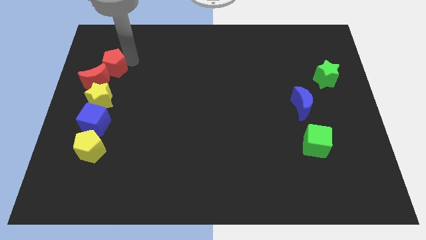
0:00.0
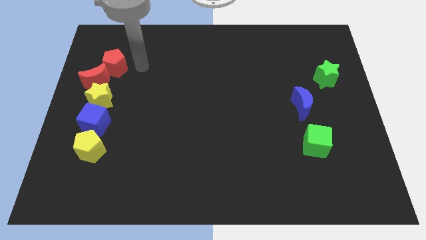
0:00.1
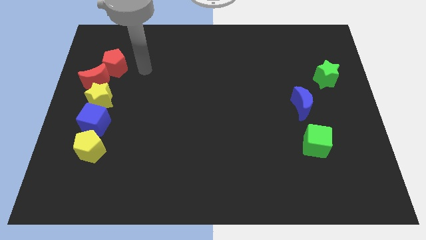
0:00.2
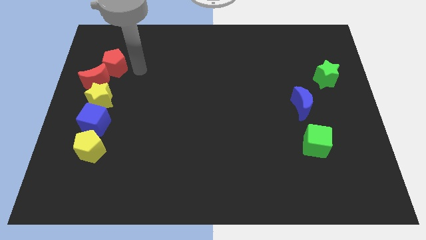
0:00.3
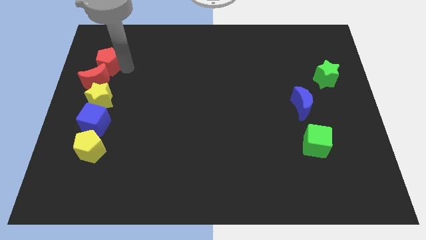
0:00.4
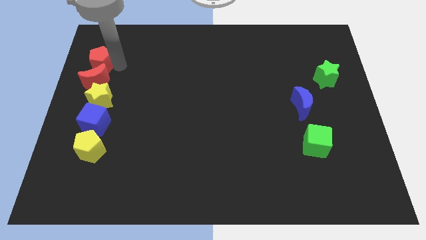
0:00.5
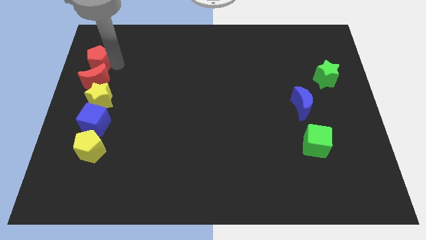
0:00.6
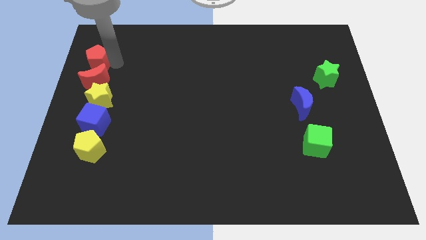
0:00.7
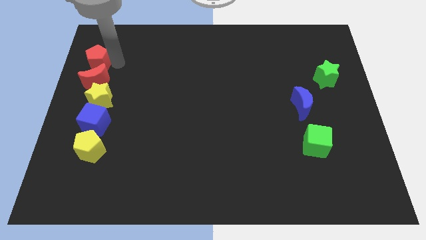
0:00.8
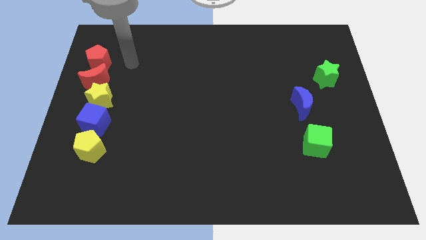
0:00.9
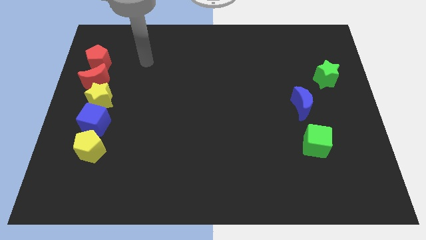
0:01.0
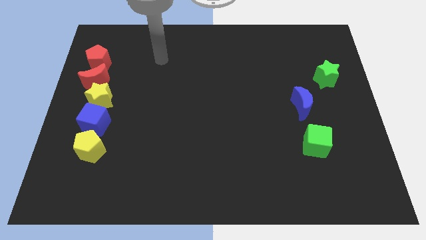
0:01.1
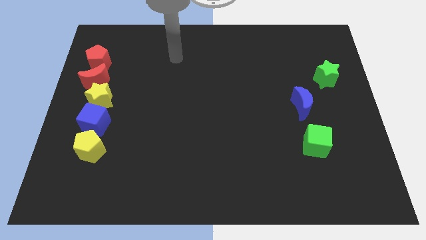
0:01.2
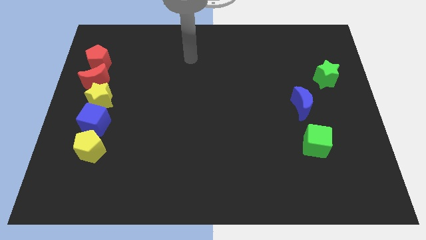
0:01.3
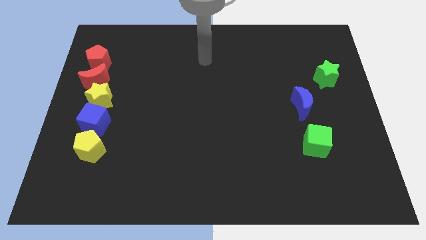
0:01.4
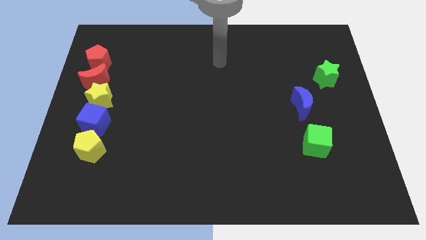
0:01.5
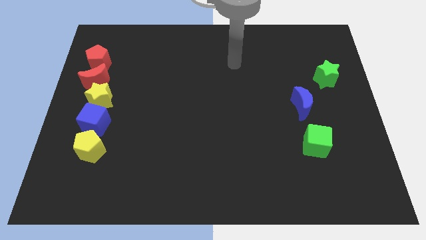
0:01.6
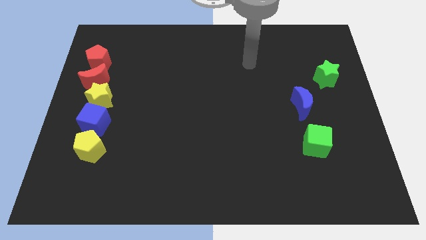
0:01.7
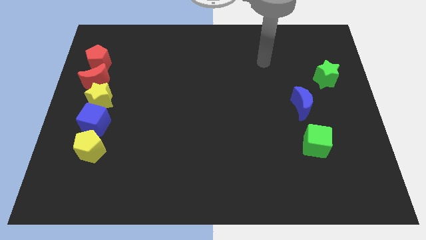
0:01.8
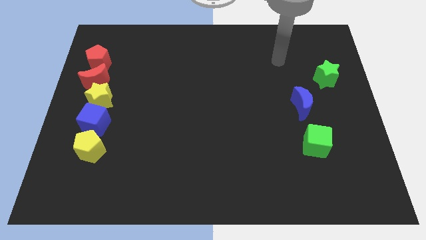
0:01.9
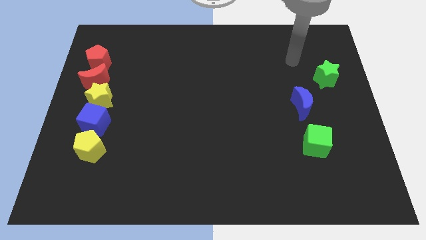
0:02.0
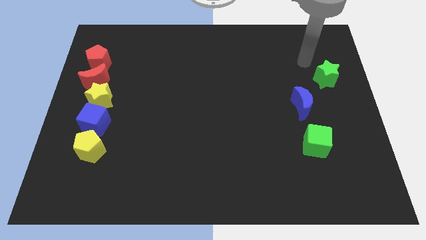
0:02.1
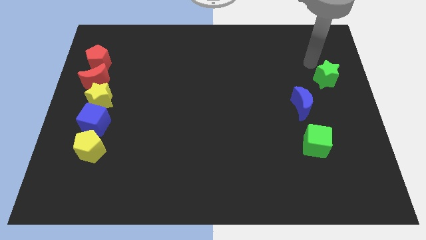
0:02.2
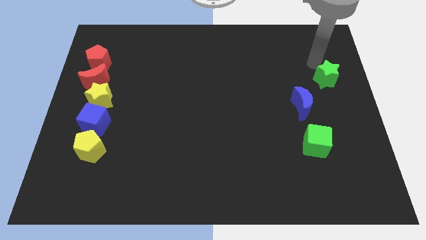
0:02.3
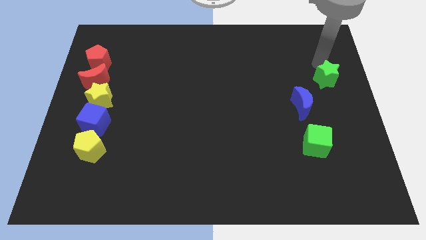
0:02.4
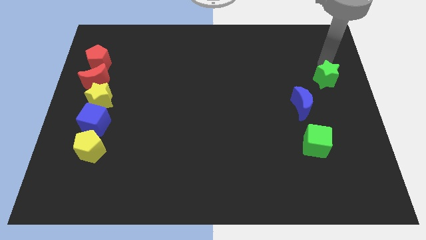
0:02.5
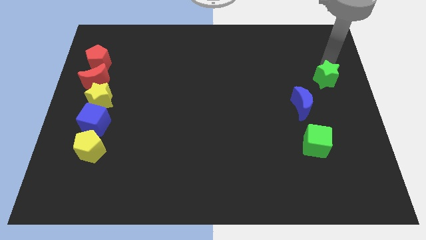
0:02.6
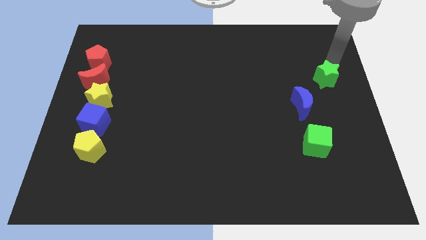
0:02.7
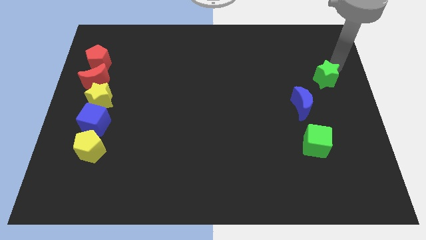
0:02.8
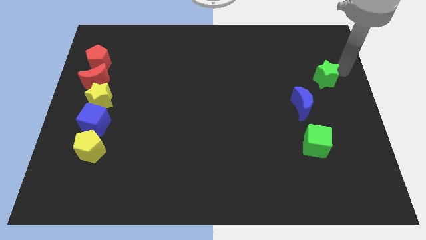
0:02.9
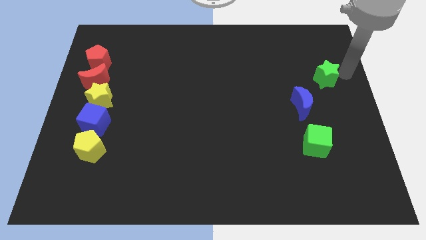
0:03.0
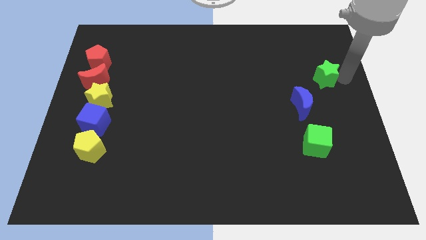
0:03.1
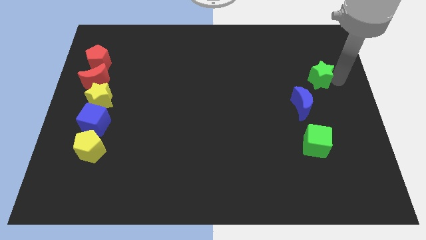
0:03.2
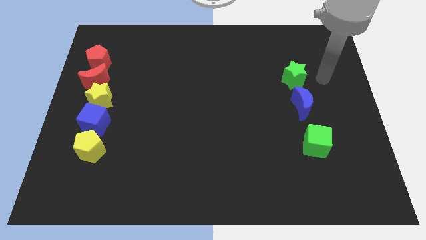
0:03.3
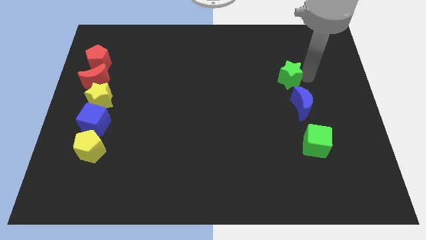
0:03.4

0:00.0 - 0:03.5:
place the arm to the right of the green star

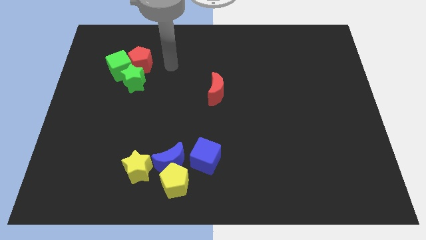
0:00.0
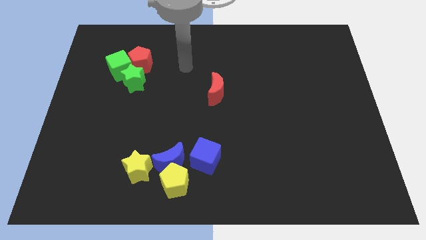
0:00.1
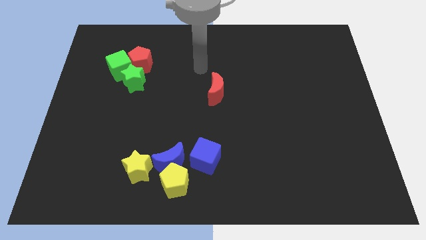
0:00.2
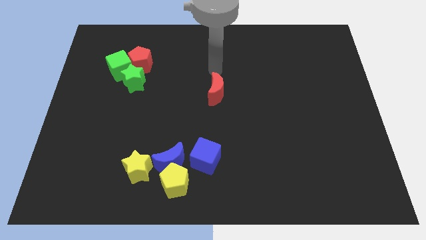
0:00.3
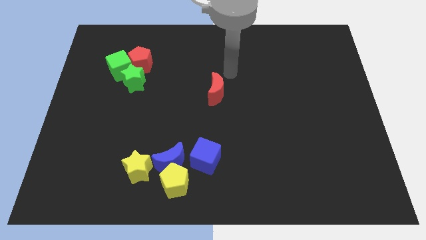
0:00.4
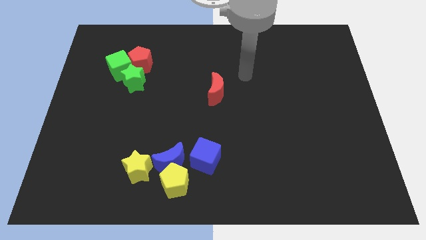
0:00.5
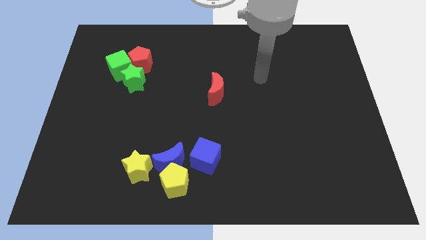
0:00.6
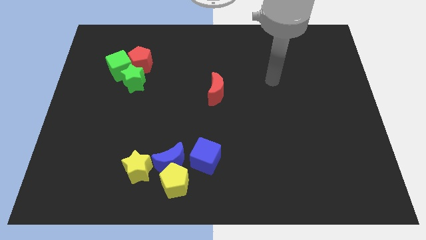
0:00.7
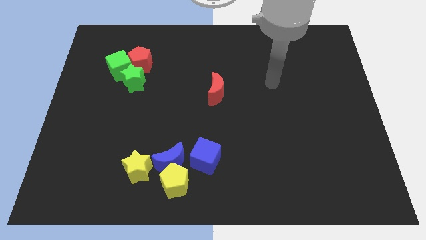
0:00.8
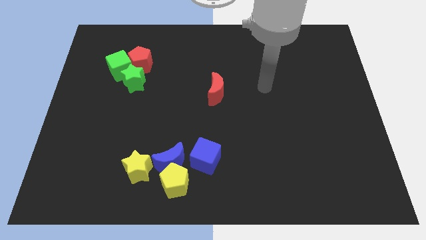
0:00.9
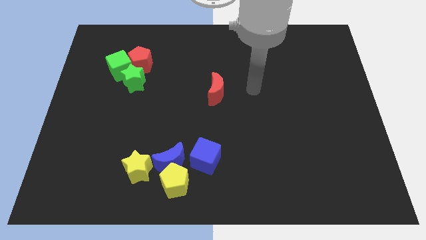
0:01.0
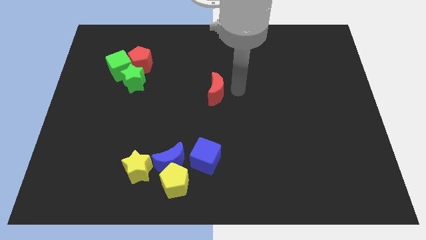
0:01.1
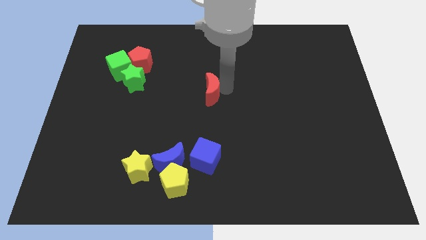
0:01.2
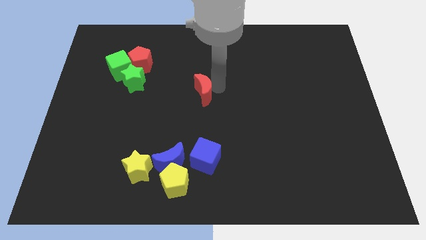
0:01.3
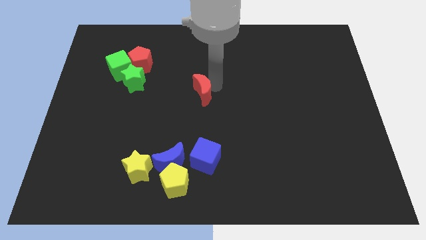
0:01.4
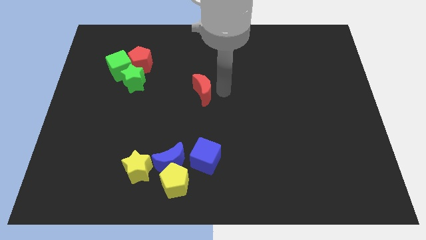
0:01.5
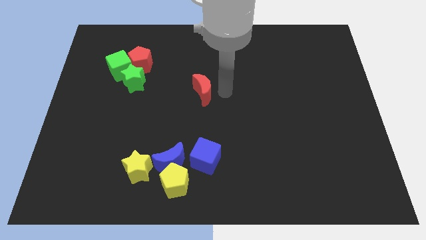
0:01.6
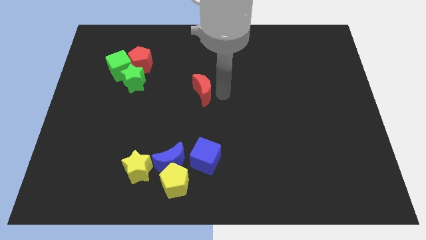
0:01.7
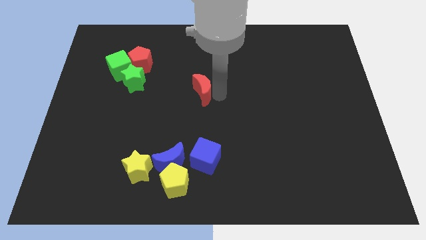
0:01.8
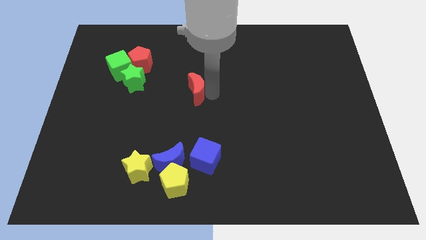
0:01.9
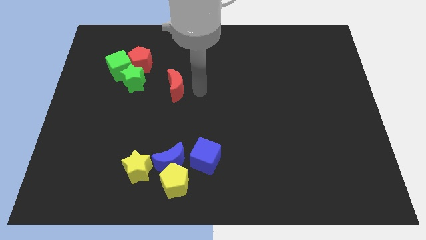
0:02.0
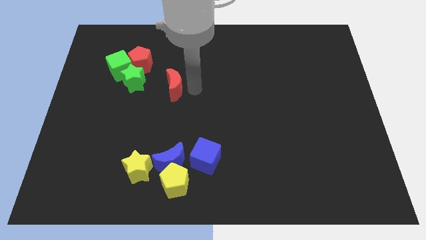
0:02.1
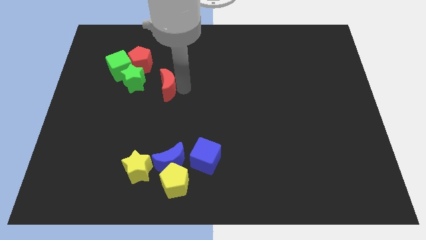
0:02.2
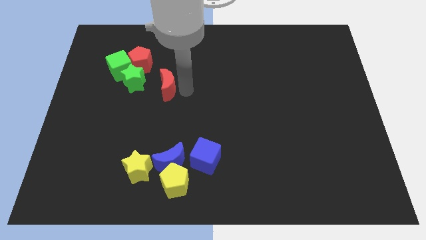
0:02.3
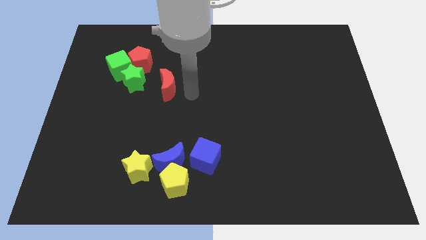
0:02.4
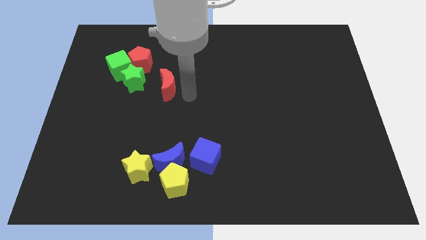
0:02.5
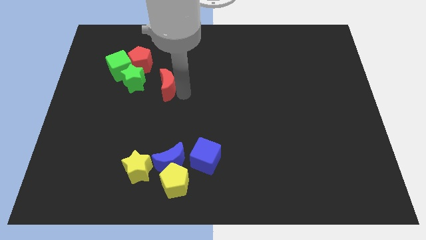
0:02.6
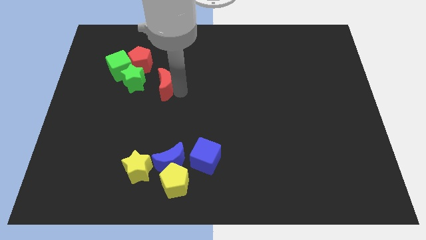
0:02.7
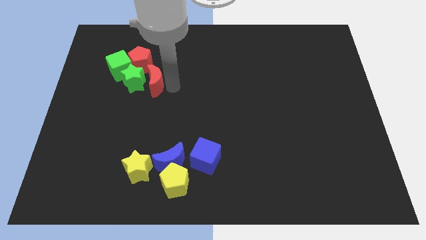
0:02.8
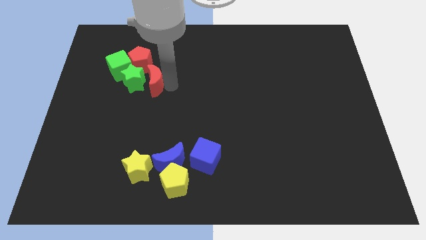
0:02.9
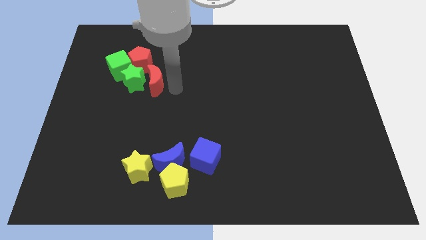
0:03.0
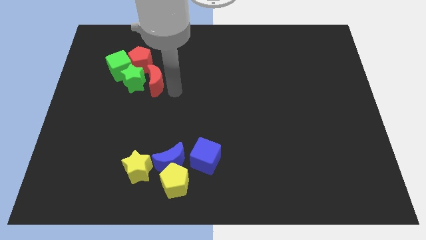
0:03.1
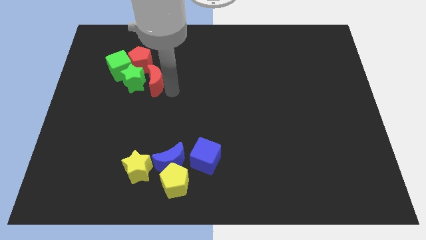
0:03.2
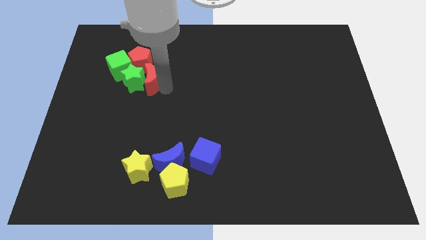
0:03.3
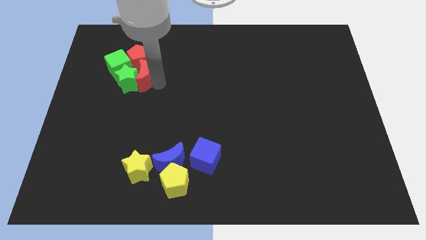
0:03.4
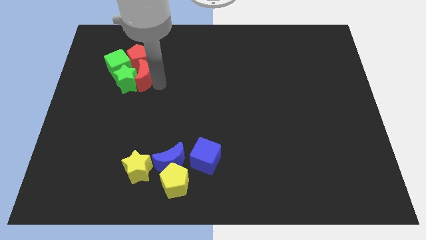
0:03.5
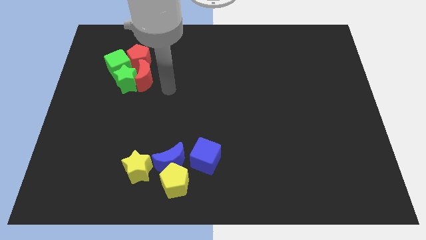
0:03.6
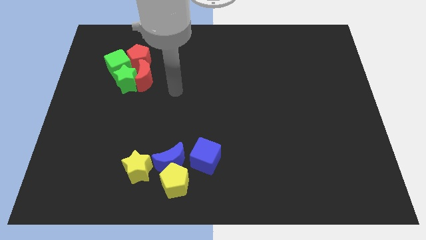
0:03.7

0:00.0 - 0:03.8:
push the red moon to the group of blocks

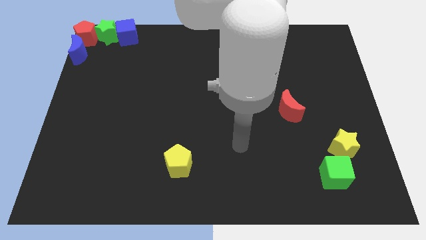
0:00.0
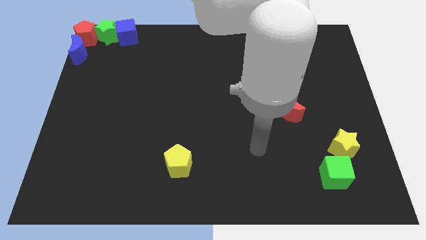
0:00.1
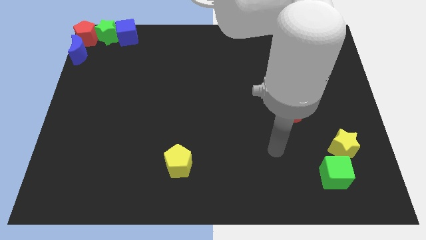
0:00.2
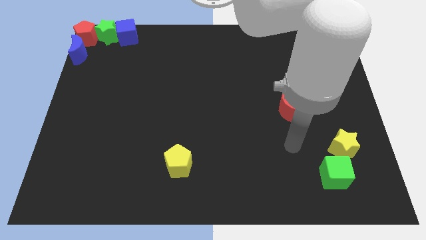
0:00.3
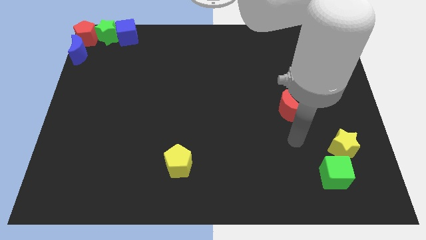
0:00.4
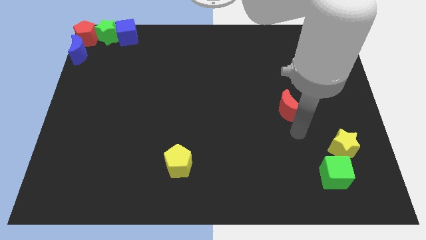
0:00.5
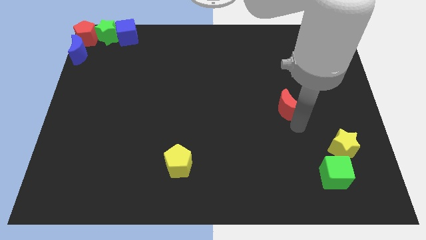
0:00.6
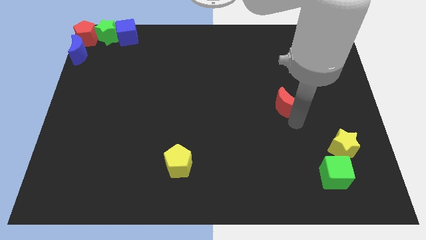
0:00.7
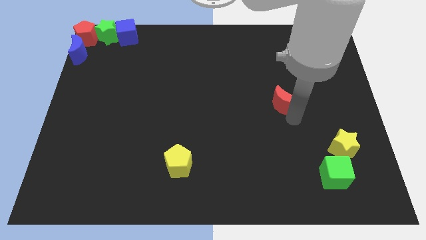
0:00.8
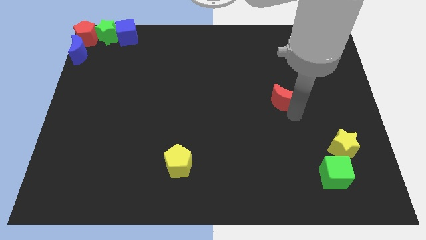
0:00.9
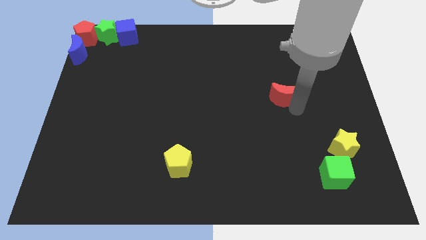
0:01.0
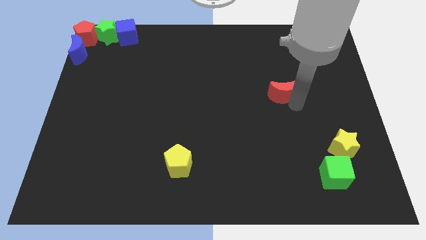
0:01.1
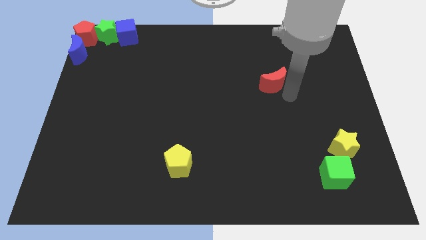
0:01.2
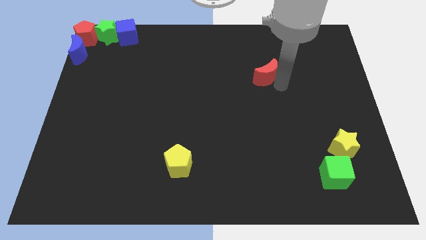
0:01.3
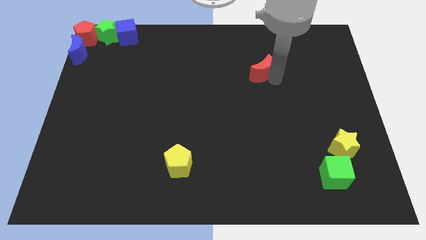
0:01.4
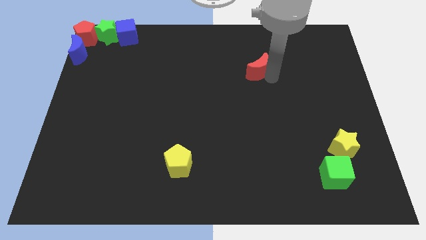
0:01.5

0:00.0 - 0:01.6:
move the red crescent towards top side of the board

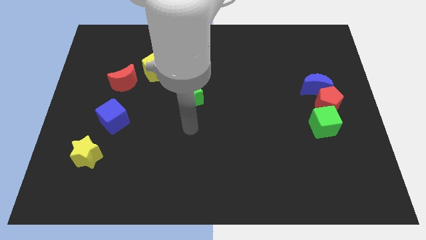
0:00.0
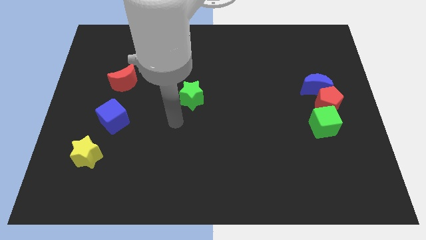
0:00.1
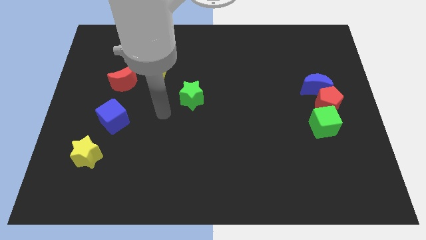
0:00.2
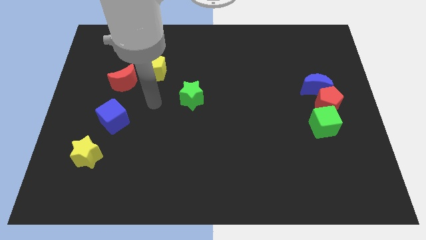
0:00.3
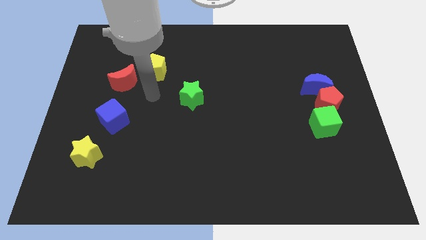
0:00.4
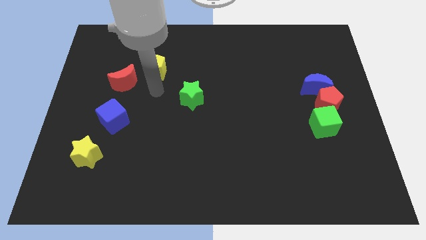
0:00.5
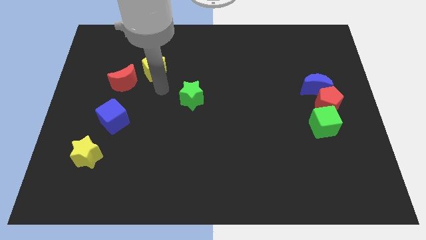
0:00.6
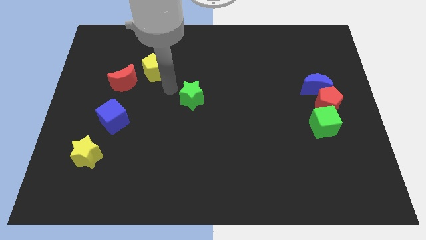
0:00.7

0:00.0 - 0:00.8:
touch the bottom of yellow pentagon
